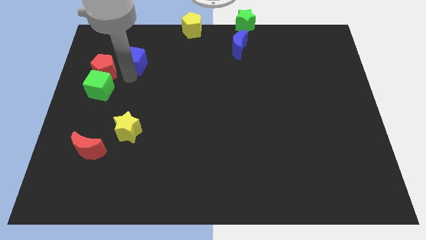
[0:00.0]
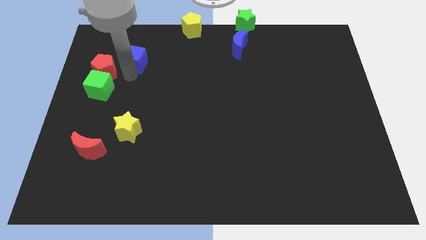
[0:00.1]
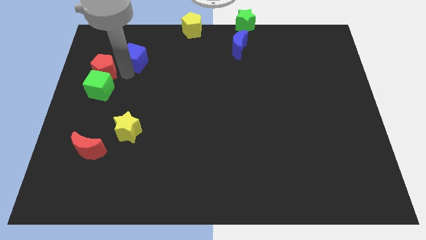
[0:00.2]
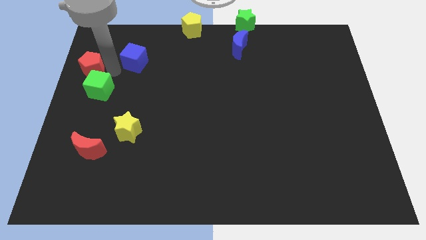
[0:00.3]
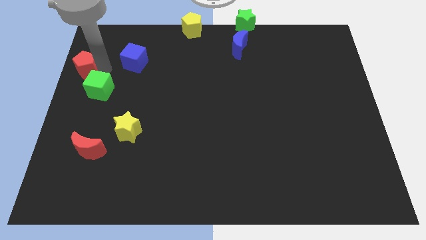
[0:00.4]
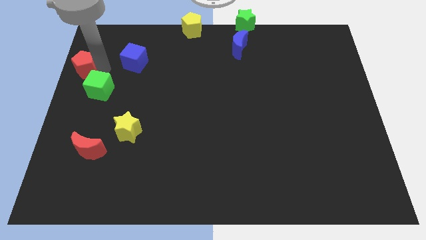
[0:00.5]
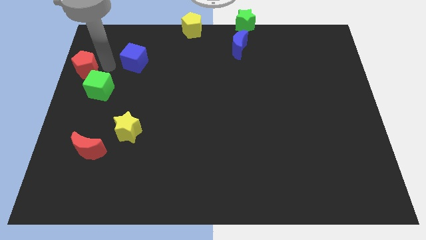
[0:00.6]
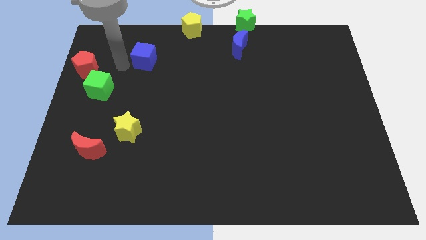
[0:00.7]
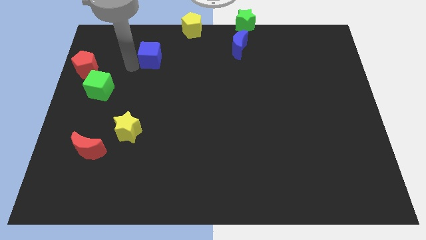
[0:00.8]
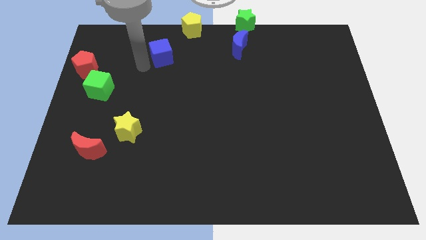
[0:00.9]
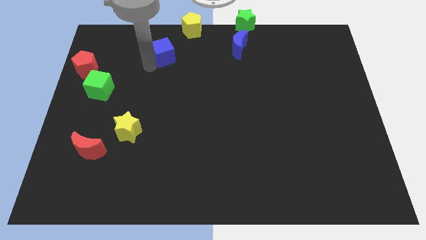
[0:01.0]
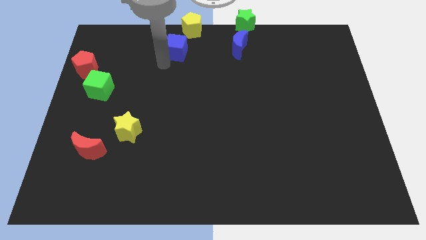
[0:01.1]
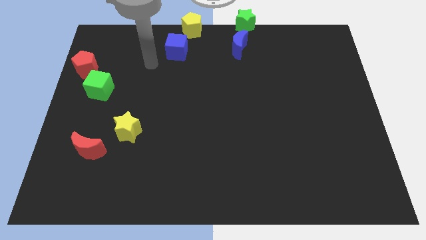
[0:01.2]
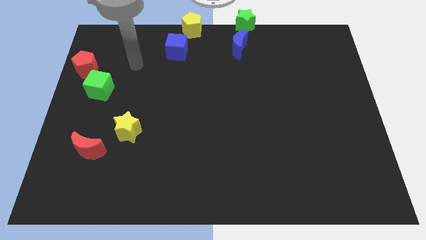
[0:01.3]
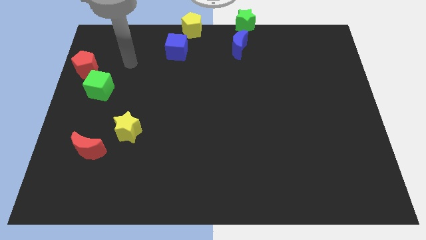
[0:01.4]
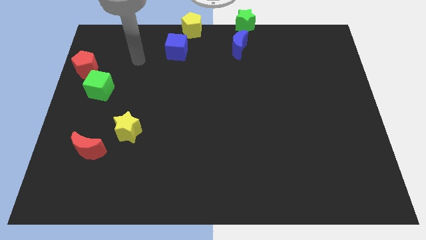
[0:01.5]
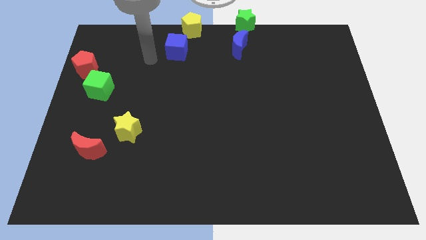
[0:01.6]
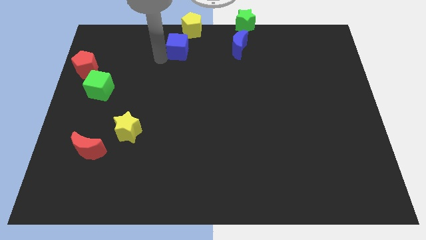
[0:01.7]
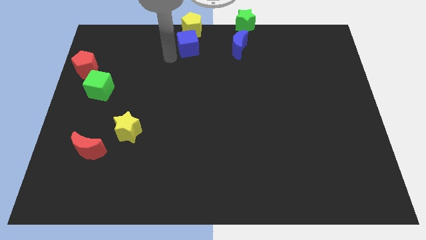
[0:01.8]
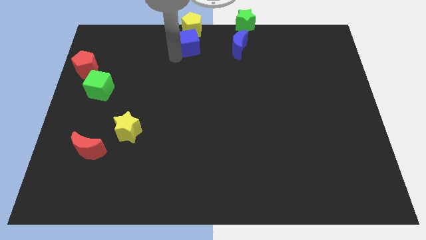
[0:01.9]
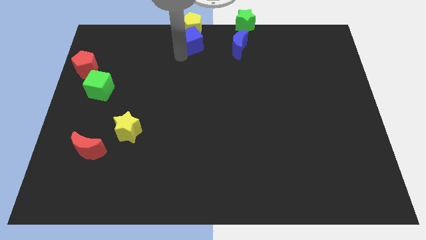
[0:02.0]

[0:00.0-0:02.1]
place blue cube below yellow pentagon

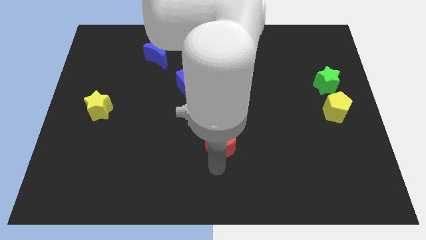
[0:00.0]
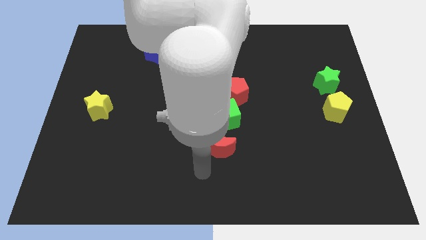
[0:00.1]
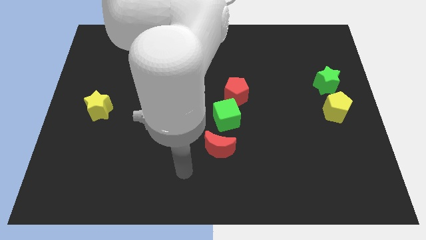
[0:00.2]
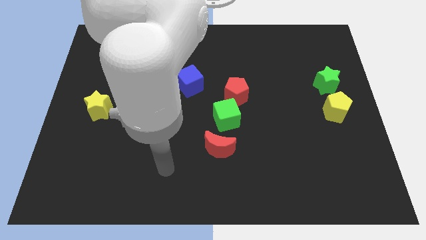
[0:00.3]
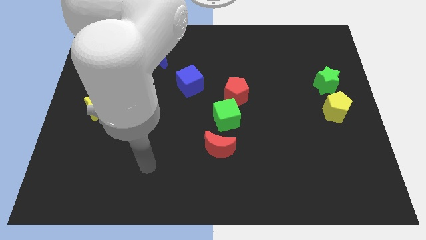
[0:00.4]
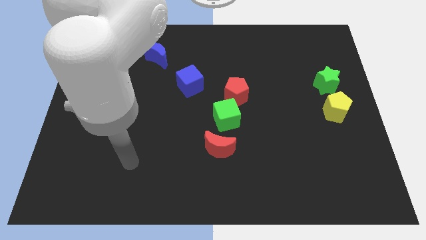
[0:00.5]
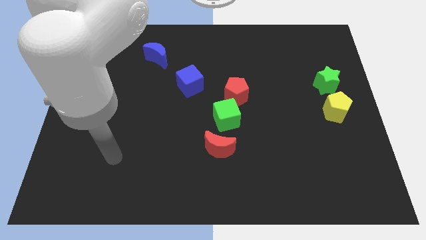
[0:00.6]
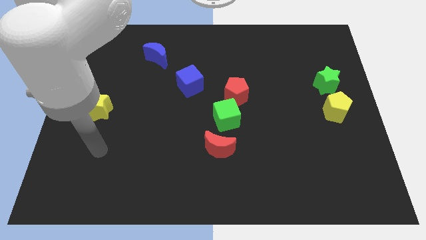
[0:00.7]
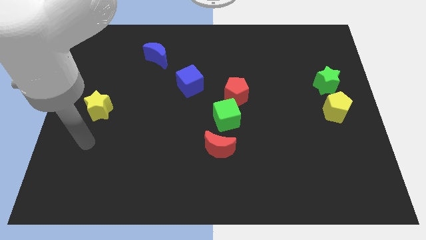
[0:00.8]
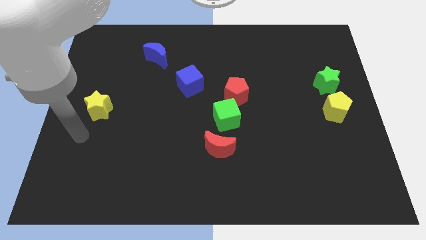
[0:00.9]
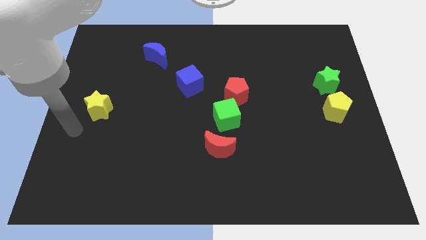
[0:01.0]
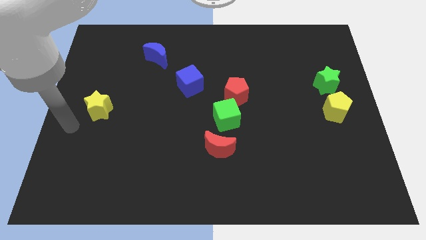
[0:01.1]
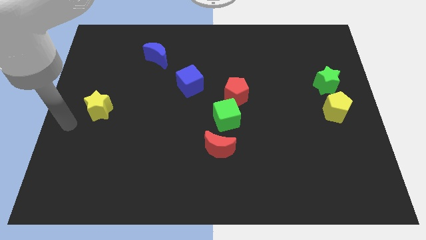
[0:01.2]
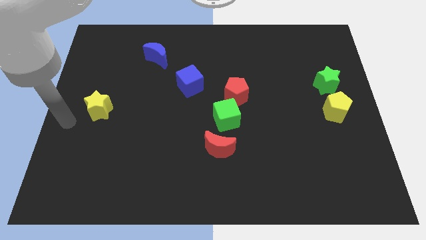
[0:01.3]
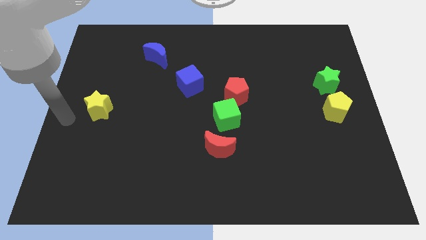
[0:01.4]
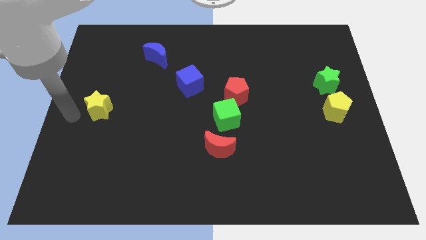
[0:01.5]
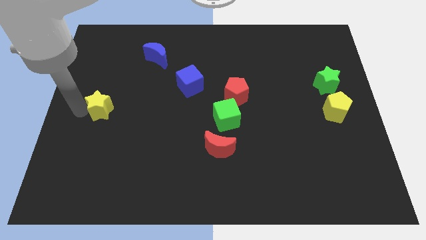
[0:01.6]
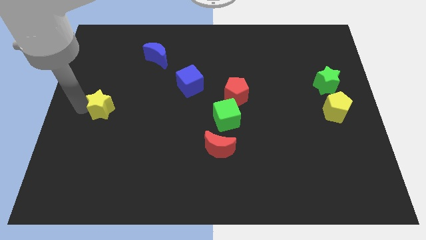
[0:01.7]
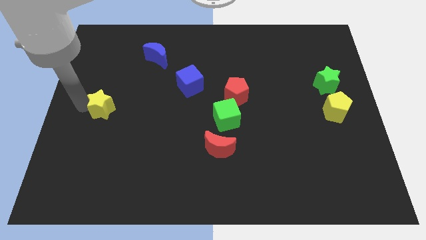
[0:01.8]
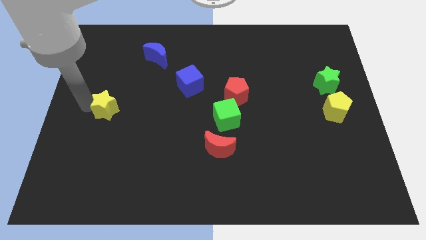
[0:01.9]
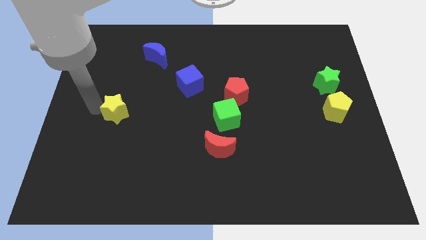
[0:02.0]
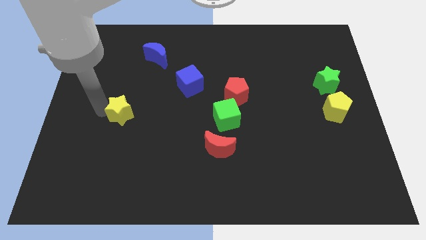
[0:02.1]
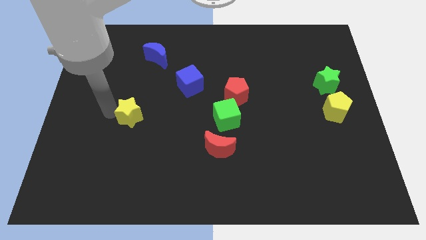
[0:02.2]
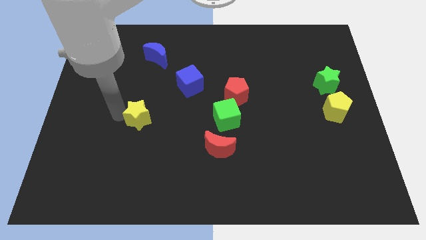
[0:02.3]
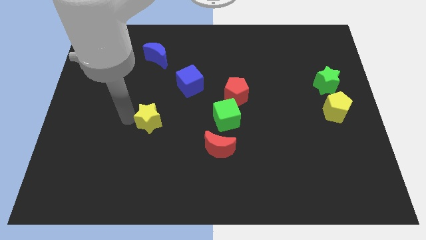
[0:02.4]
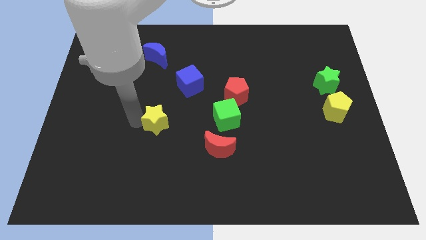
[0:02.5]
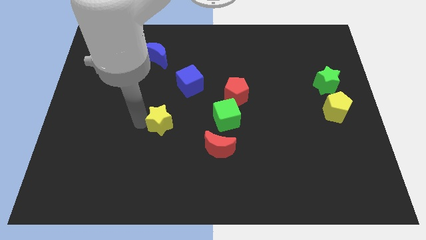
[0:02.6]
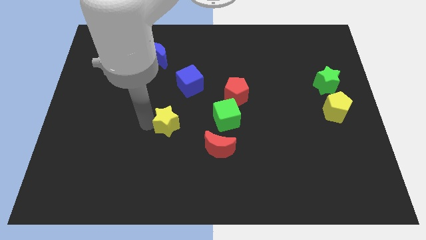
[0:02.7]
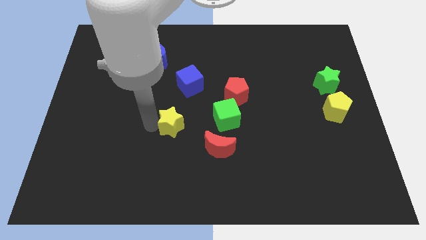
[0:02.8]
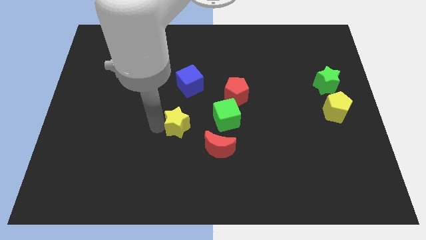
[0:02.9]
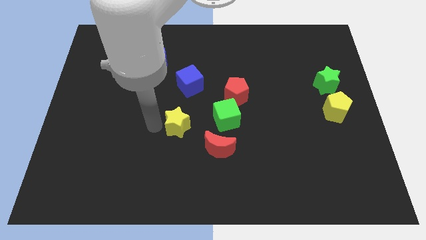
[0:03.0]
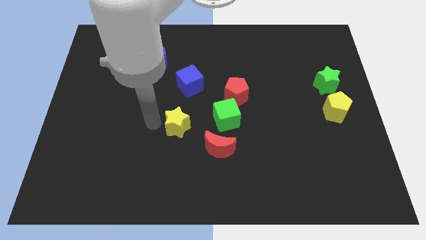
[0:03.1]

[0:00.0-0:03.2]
push the yellow star towards the green cube

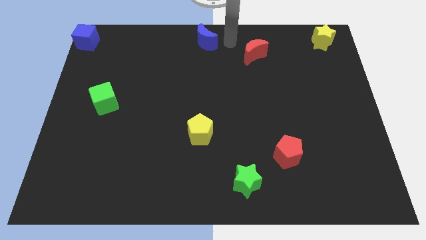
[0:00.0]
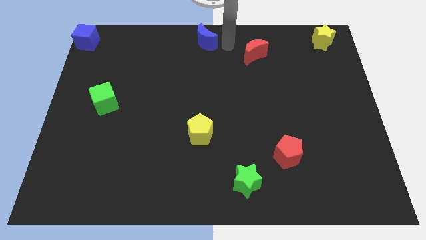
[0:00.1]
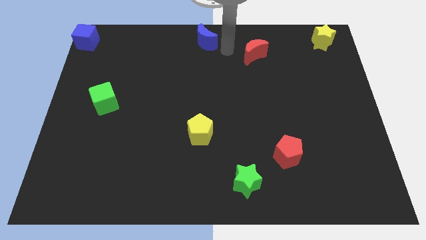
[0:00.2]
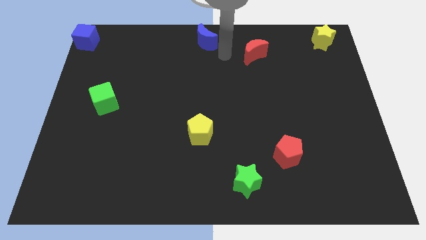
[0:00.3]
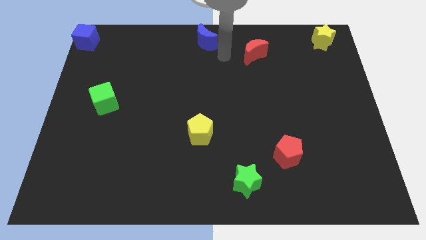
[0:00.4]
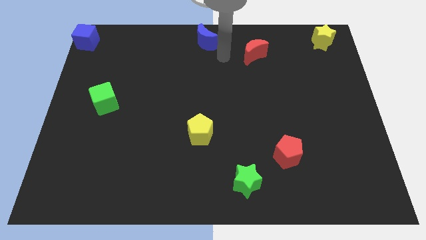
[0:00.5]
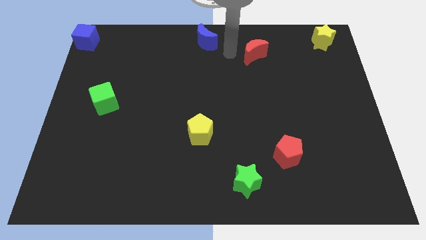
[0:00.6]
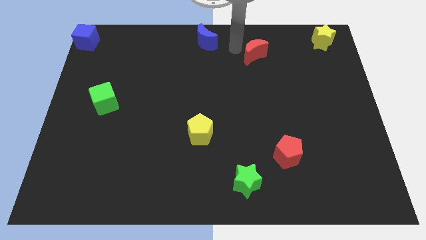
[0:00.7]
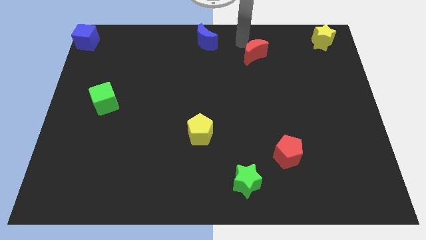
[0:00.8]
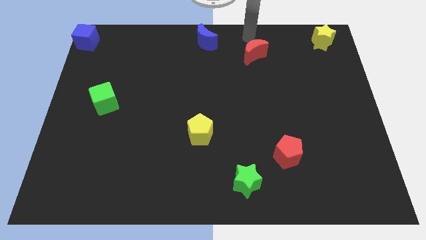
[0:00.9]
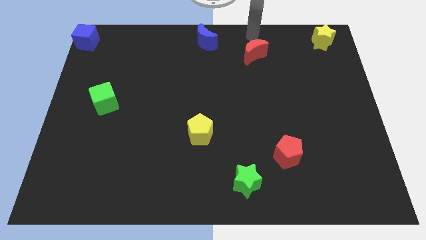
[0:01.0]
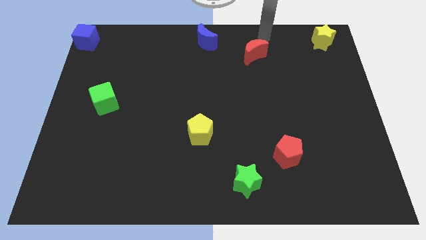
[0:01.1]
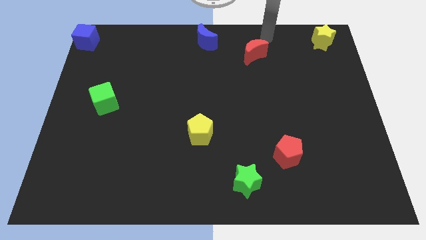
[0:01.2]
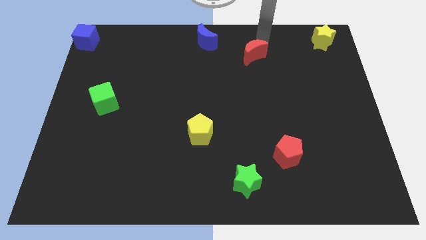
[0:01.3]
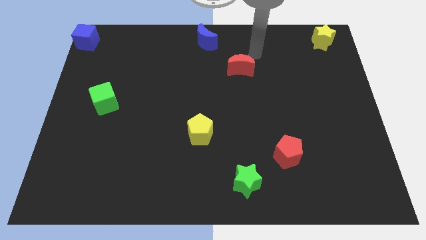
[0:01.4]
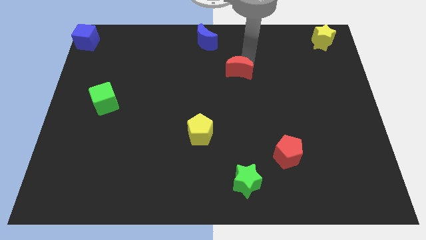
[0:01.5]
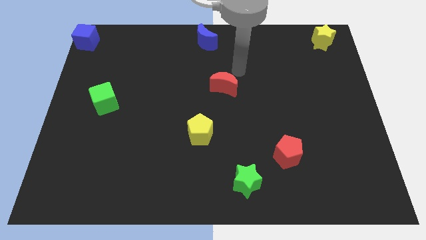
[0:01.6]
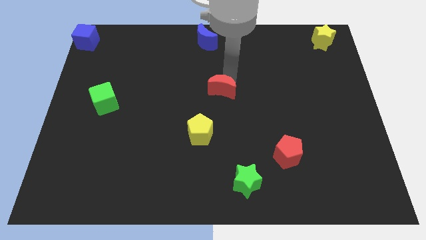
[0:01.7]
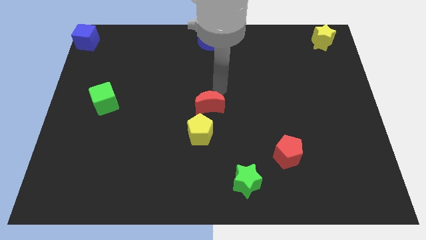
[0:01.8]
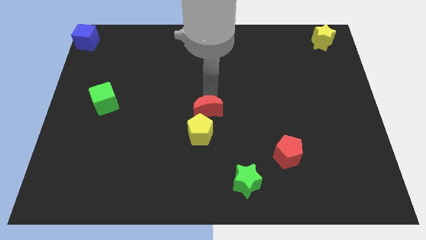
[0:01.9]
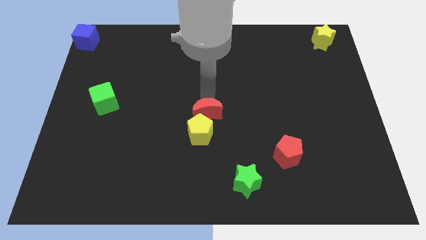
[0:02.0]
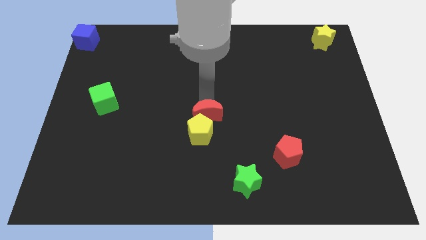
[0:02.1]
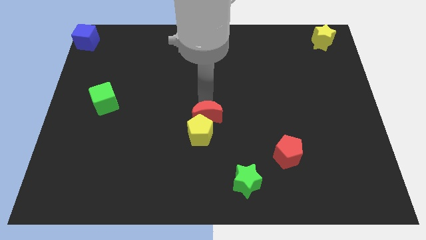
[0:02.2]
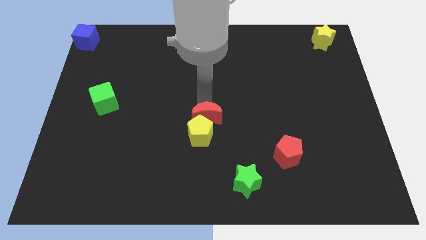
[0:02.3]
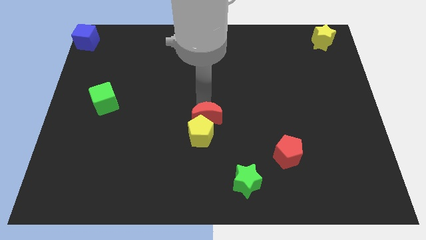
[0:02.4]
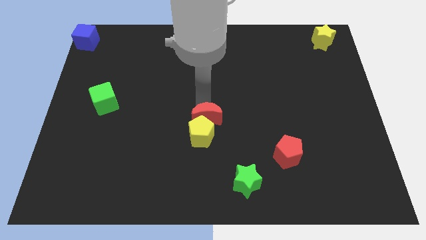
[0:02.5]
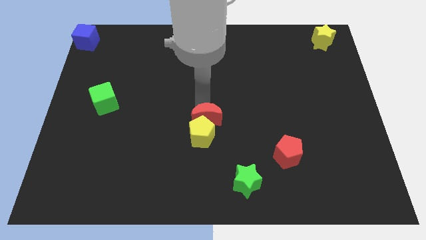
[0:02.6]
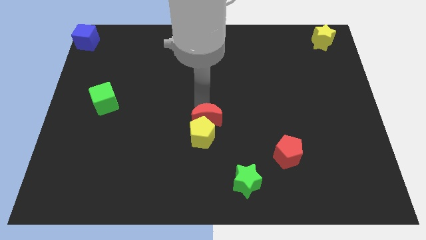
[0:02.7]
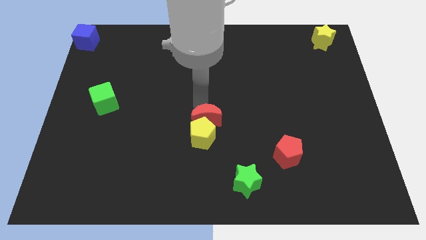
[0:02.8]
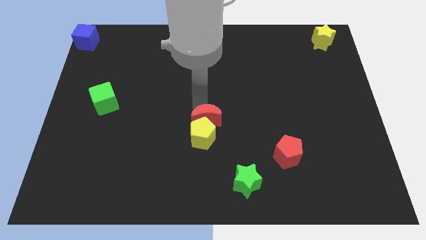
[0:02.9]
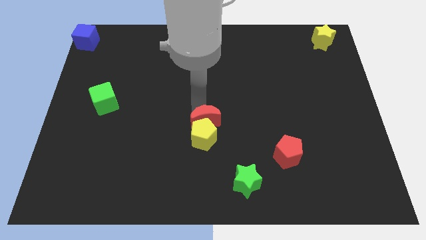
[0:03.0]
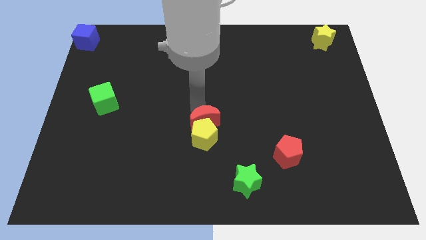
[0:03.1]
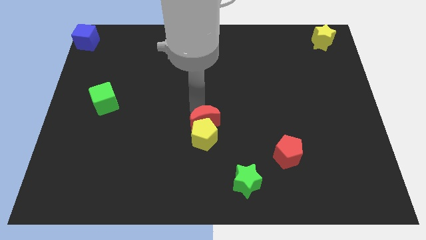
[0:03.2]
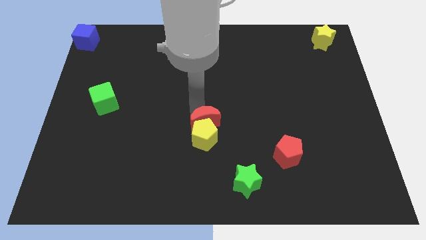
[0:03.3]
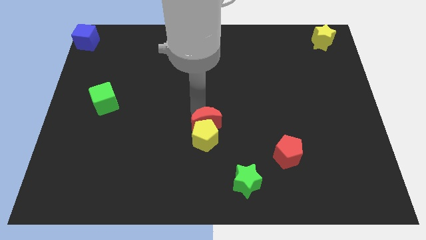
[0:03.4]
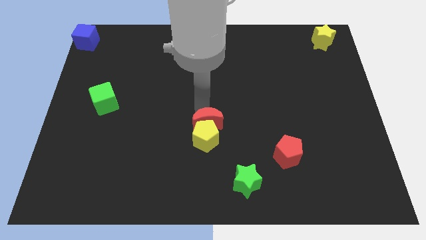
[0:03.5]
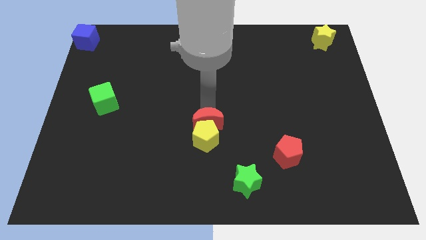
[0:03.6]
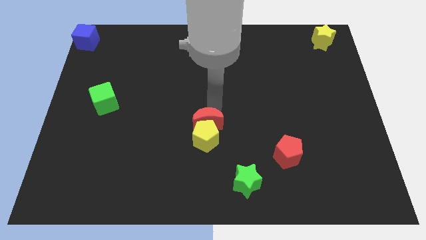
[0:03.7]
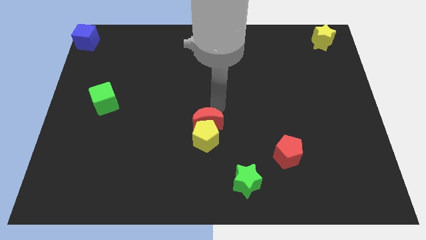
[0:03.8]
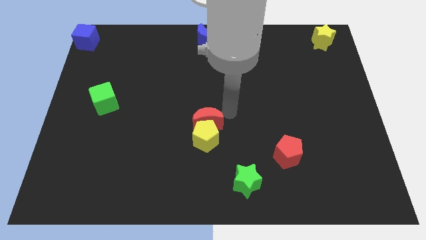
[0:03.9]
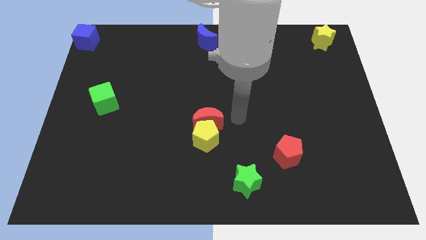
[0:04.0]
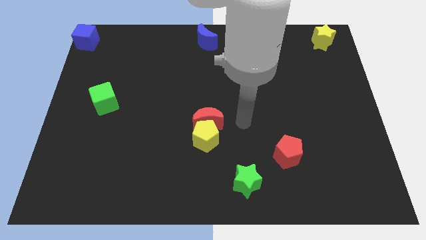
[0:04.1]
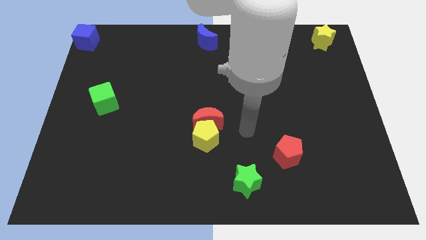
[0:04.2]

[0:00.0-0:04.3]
place the red crescent above the yellow pentagon
